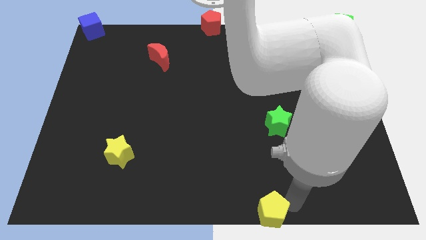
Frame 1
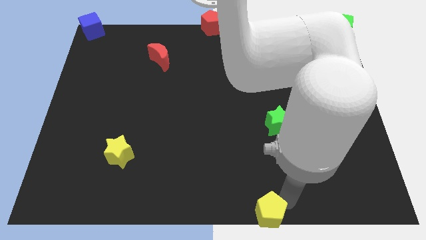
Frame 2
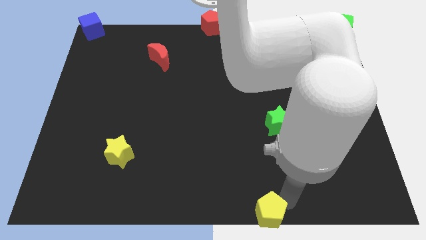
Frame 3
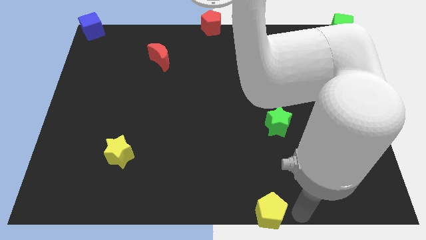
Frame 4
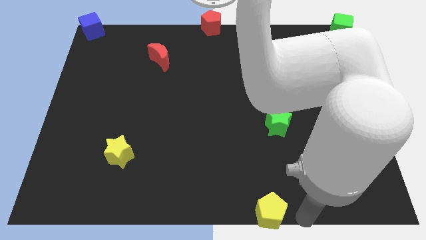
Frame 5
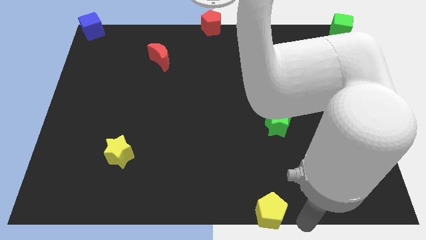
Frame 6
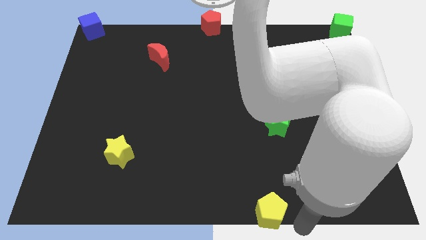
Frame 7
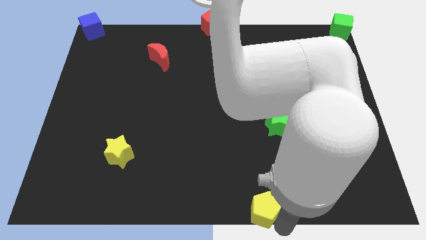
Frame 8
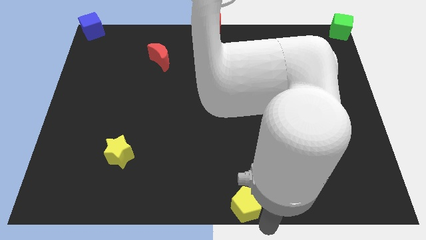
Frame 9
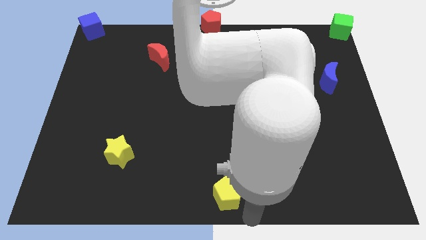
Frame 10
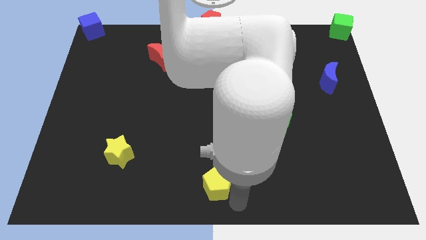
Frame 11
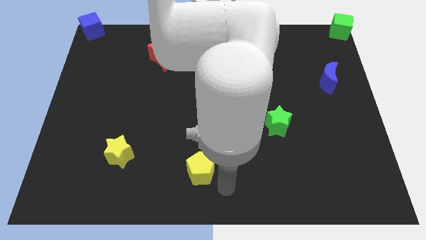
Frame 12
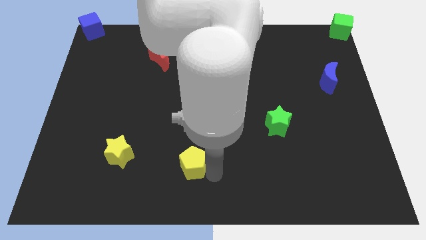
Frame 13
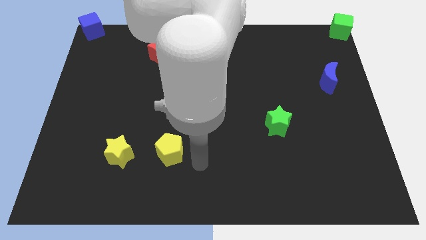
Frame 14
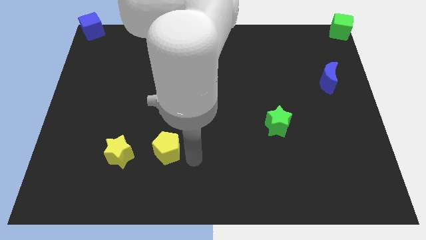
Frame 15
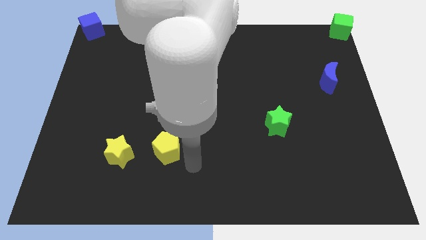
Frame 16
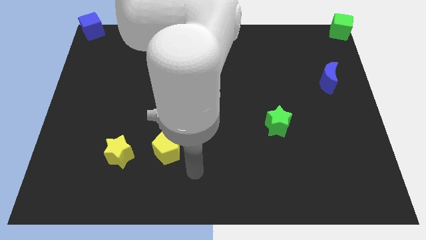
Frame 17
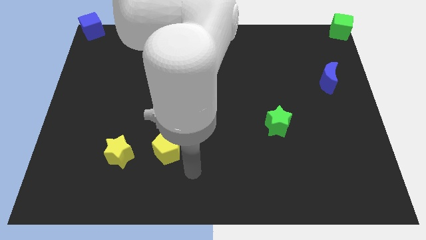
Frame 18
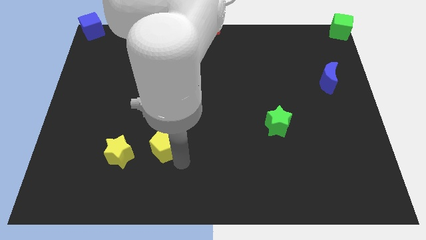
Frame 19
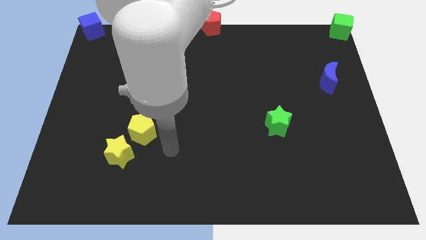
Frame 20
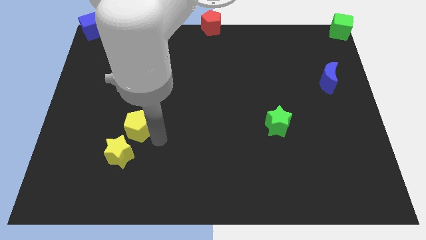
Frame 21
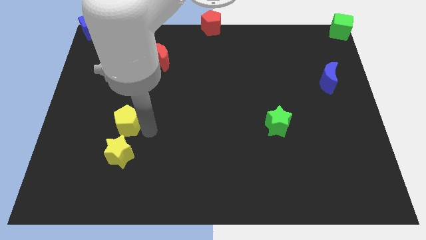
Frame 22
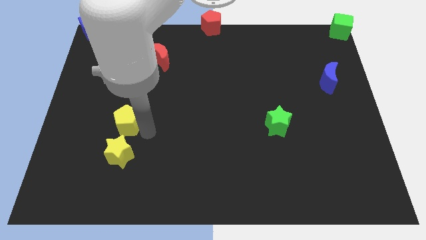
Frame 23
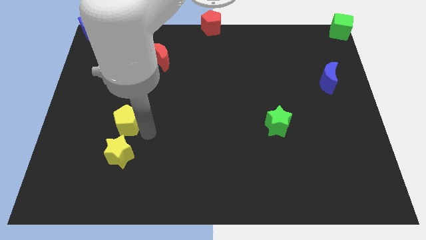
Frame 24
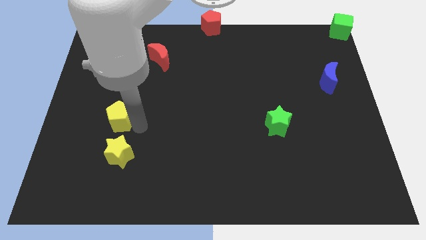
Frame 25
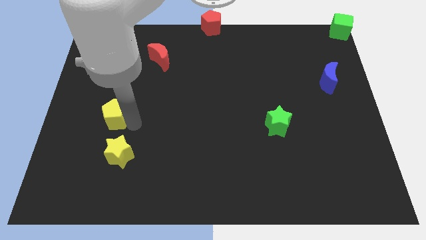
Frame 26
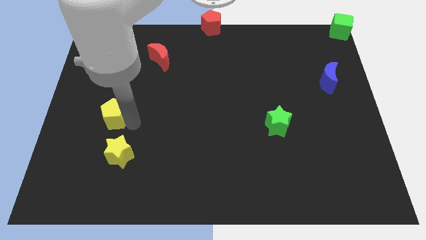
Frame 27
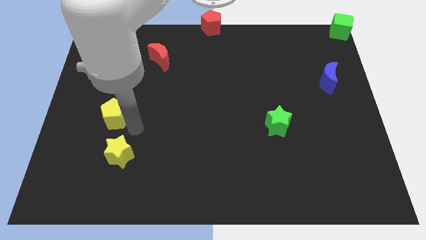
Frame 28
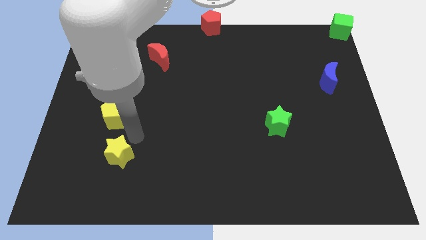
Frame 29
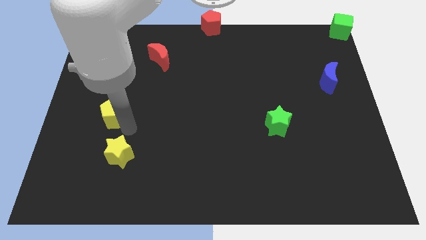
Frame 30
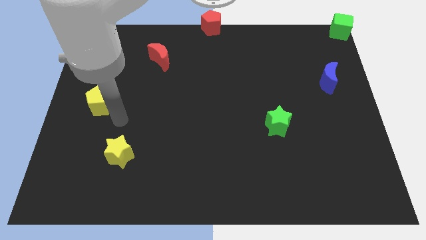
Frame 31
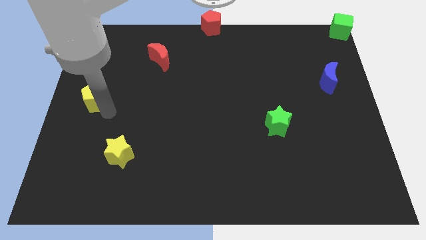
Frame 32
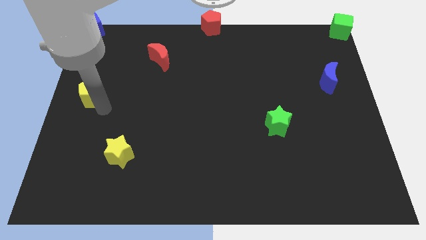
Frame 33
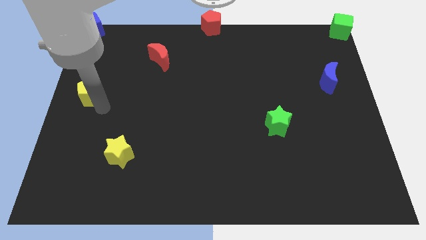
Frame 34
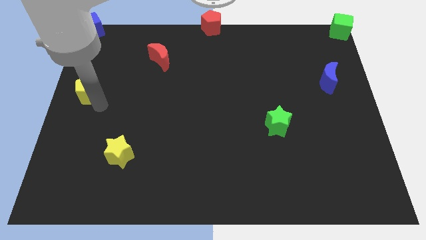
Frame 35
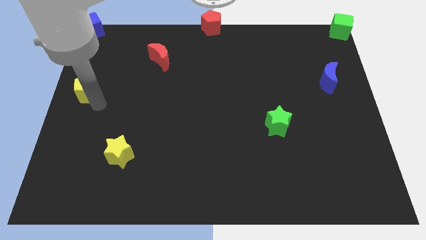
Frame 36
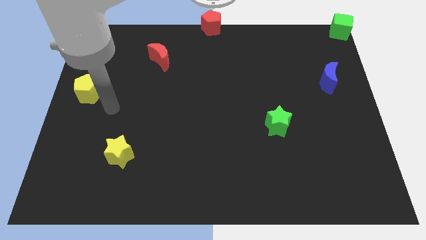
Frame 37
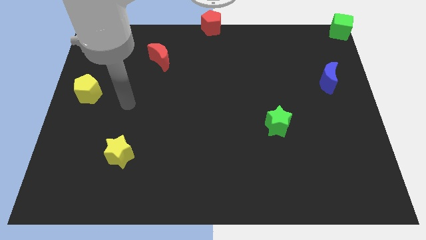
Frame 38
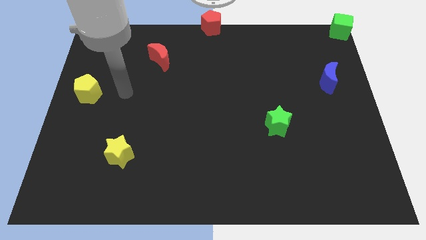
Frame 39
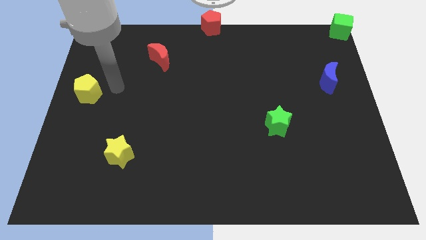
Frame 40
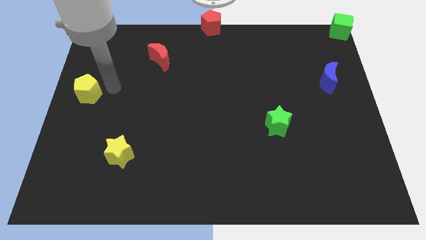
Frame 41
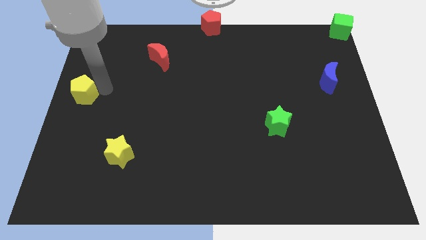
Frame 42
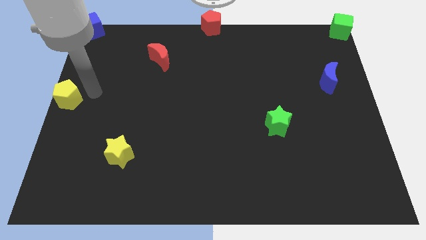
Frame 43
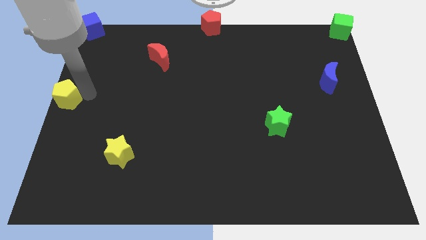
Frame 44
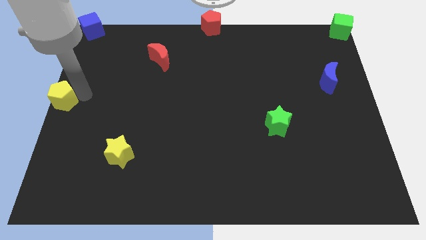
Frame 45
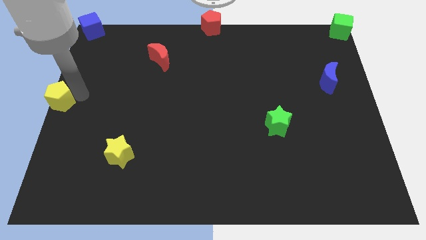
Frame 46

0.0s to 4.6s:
place yellow pentagon to the left center

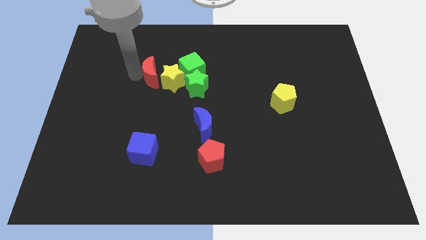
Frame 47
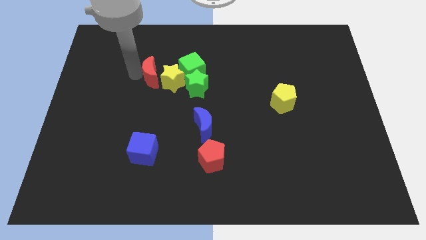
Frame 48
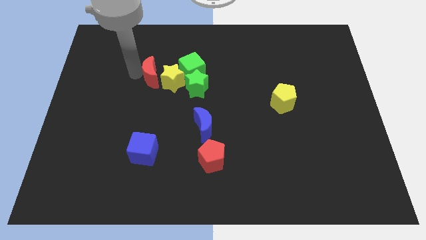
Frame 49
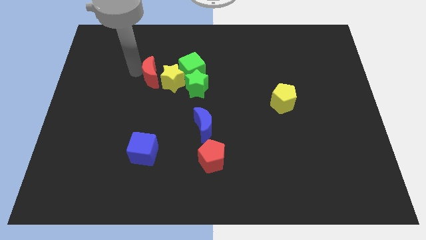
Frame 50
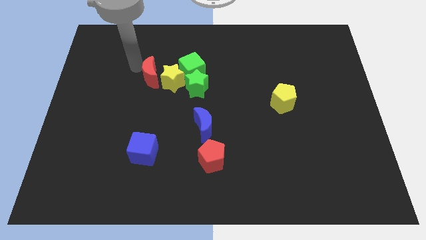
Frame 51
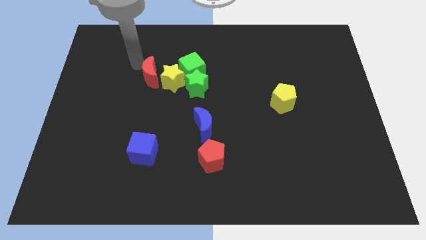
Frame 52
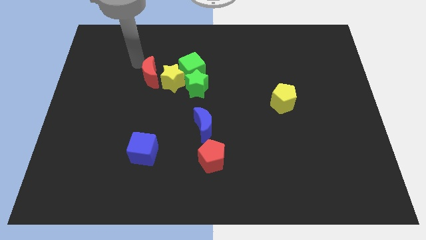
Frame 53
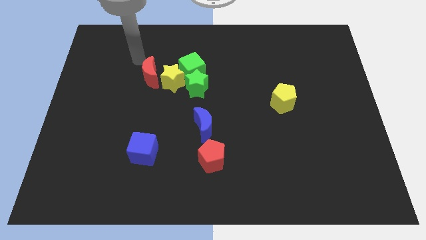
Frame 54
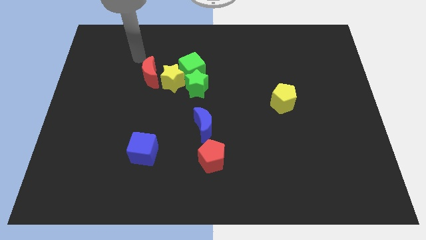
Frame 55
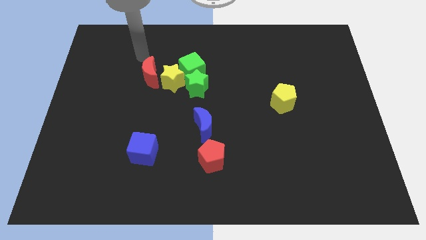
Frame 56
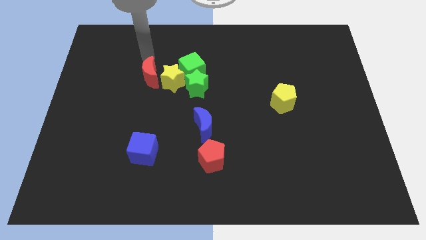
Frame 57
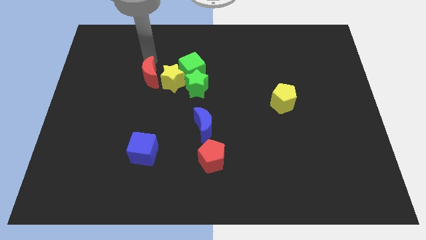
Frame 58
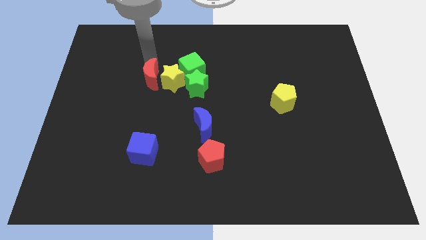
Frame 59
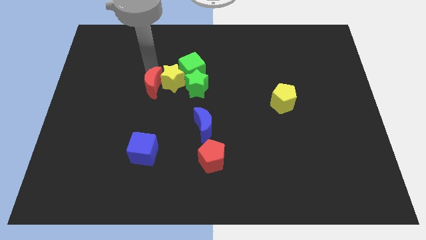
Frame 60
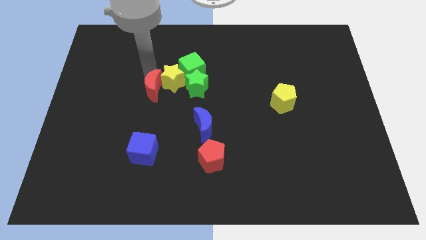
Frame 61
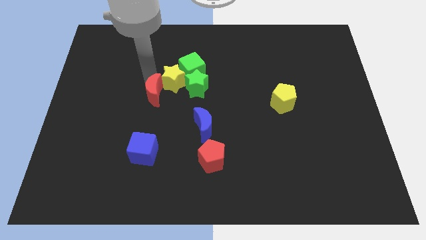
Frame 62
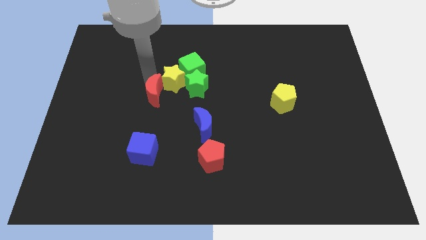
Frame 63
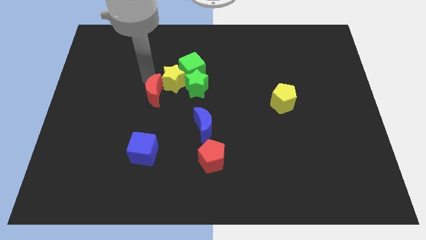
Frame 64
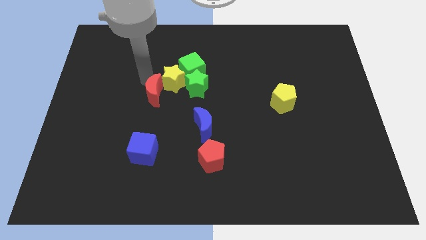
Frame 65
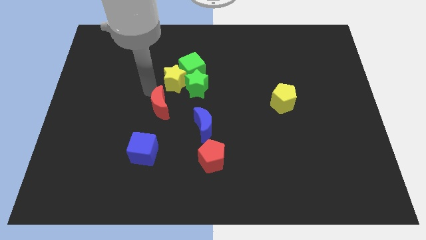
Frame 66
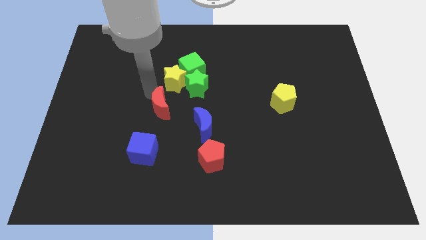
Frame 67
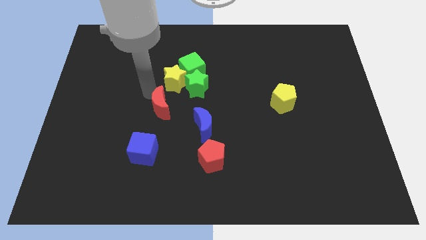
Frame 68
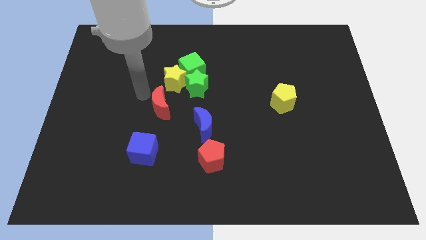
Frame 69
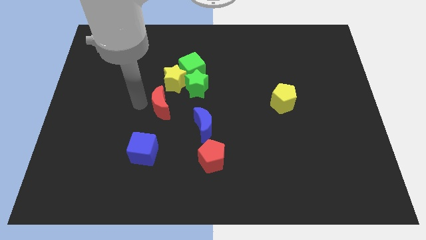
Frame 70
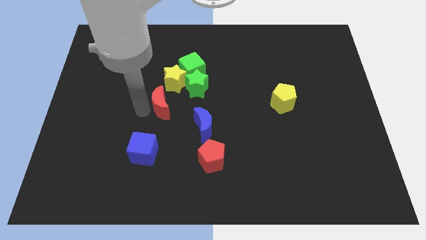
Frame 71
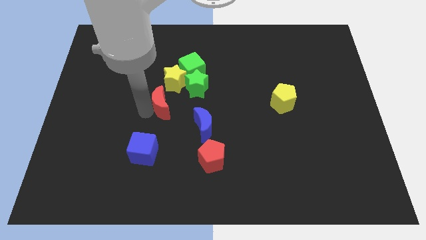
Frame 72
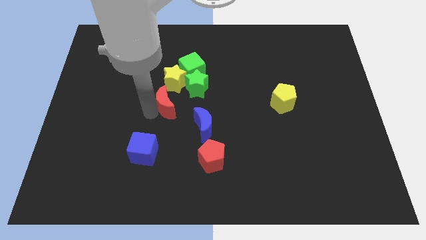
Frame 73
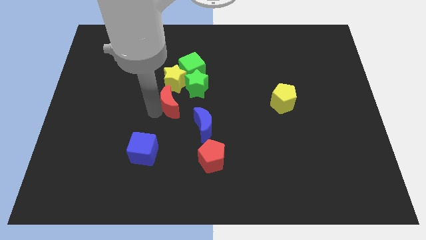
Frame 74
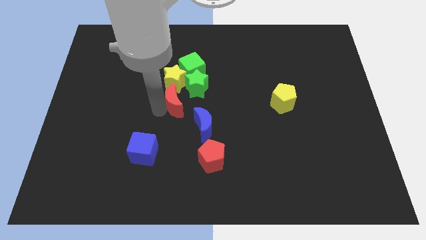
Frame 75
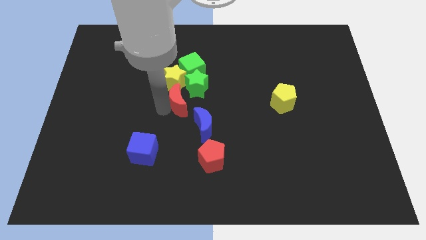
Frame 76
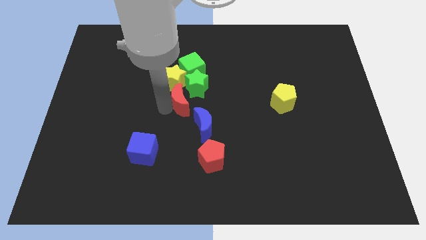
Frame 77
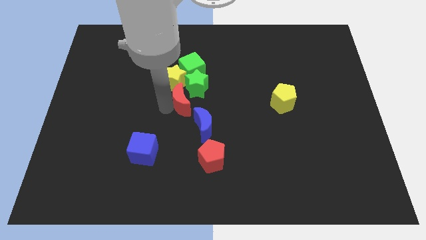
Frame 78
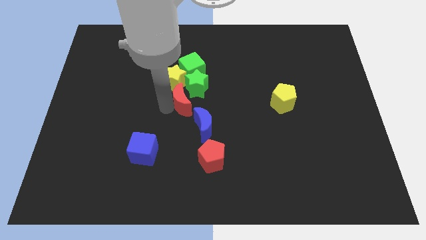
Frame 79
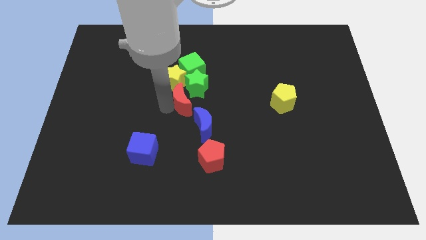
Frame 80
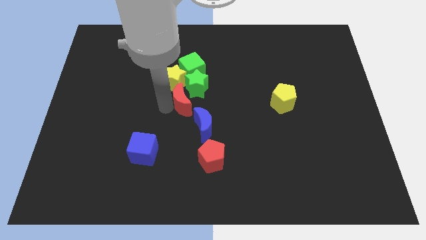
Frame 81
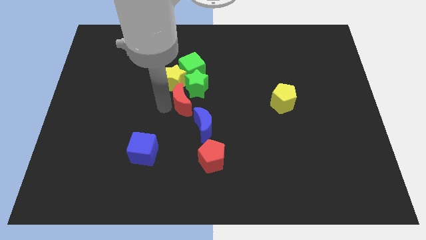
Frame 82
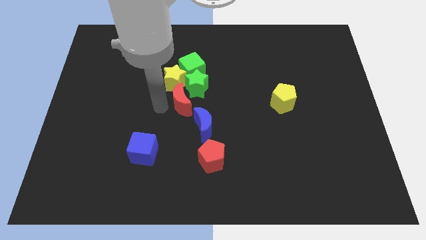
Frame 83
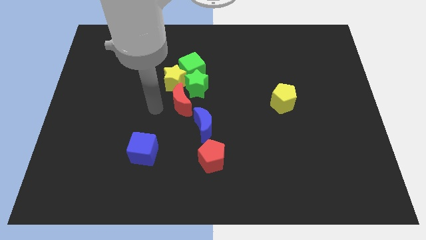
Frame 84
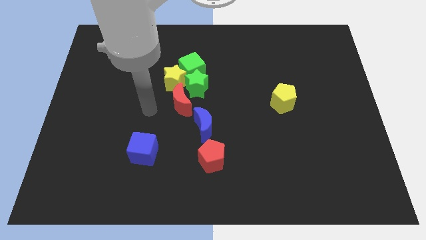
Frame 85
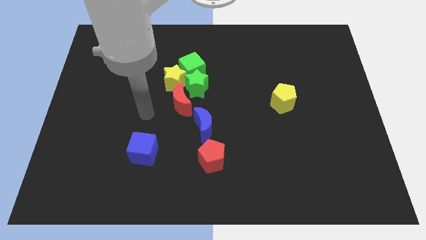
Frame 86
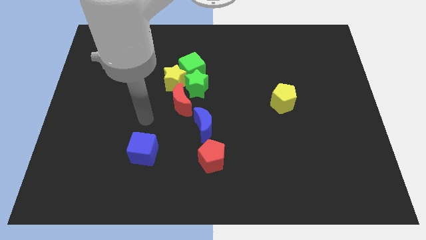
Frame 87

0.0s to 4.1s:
move red moon to top left of blue moon

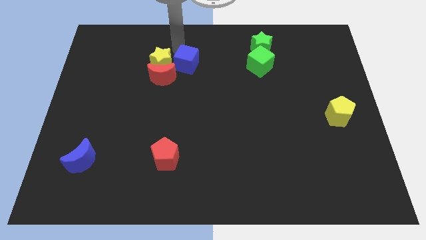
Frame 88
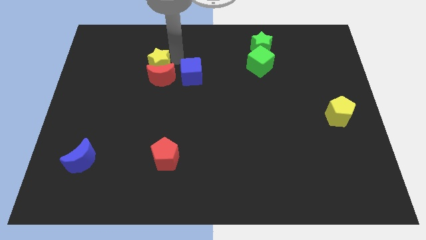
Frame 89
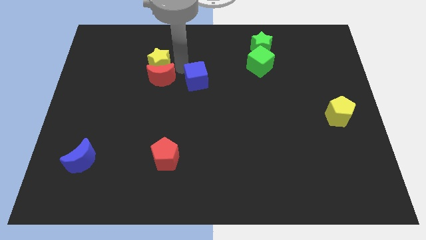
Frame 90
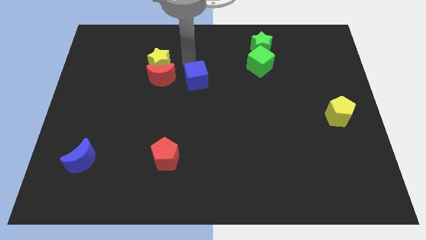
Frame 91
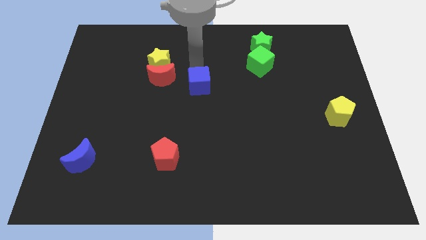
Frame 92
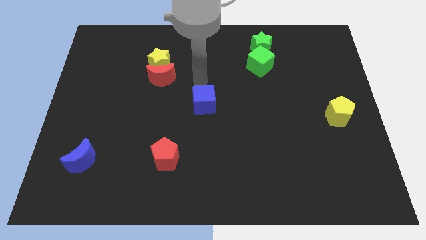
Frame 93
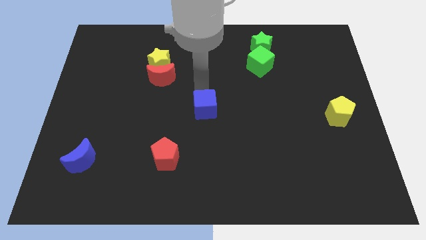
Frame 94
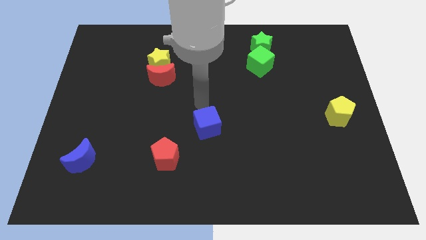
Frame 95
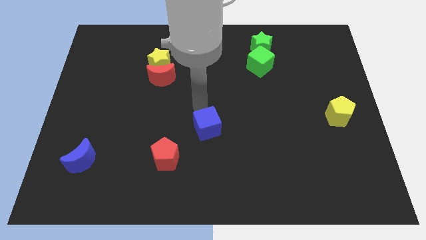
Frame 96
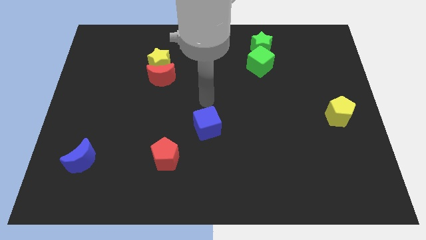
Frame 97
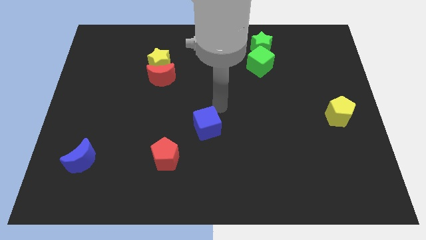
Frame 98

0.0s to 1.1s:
slide blue cube towards center
